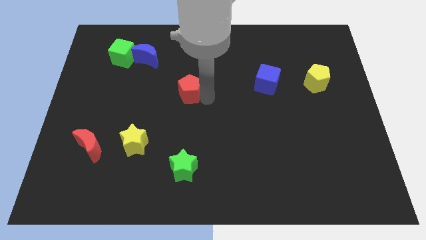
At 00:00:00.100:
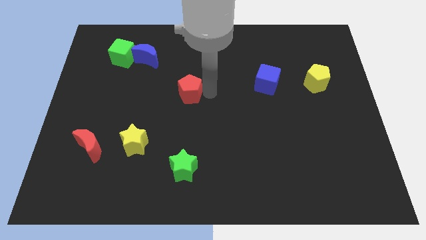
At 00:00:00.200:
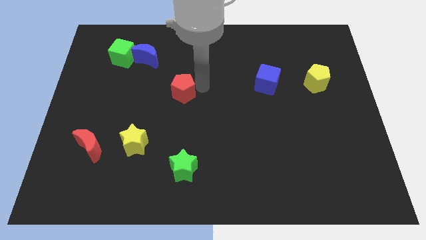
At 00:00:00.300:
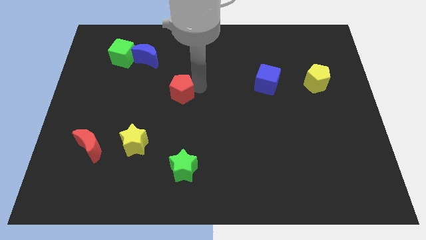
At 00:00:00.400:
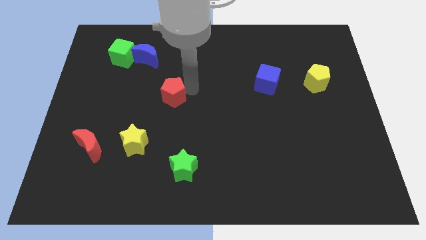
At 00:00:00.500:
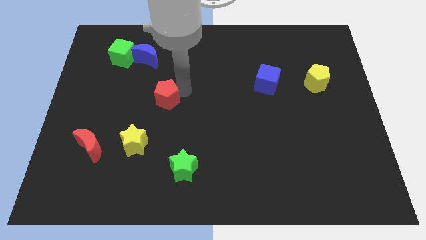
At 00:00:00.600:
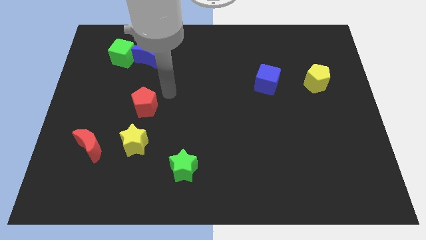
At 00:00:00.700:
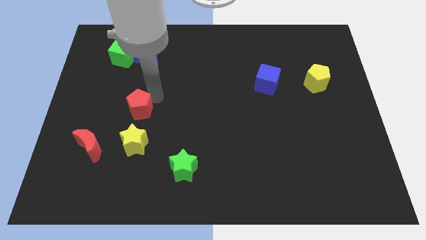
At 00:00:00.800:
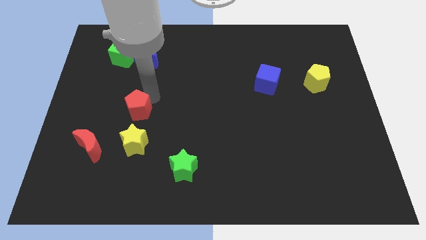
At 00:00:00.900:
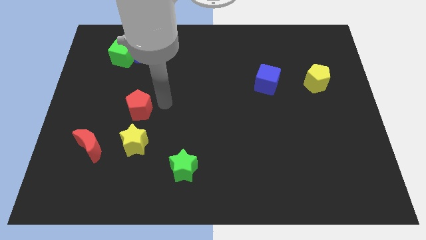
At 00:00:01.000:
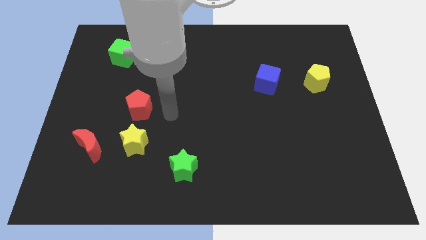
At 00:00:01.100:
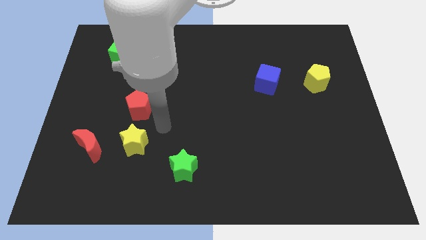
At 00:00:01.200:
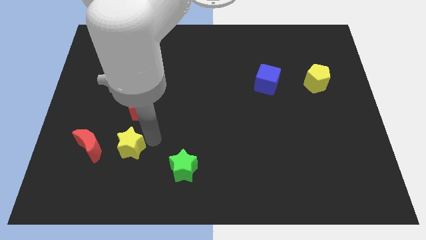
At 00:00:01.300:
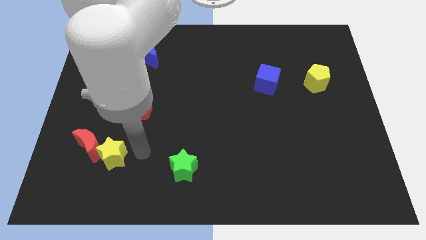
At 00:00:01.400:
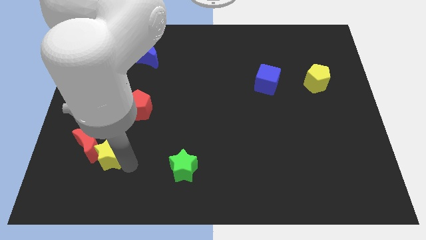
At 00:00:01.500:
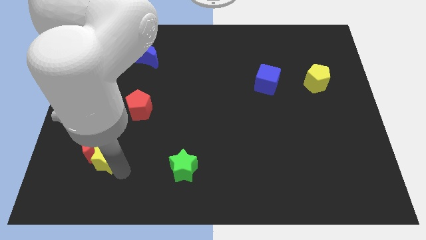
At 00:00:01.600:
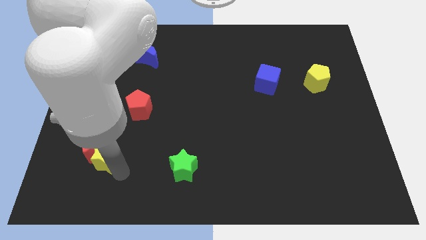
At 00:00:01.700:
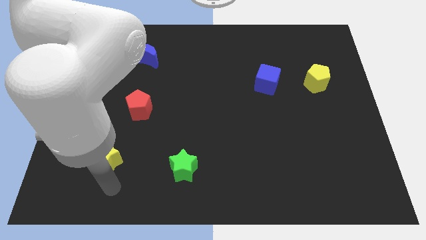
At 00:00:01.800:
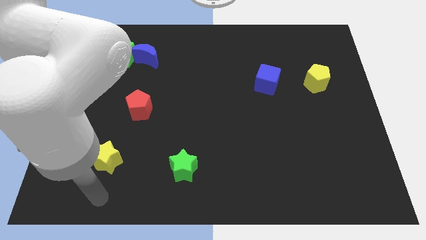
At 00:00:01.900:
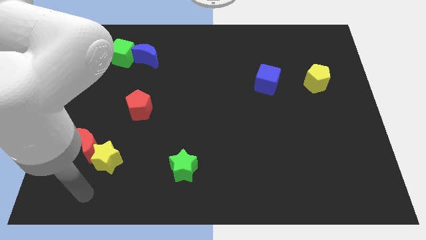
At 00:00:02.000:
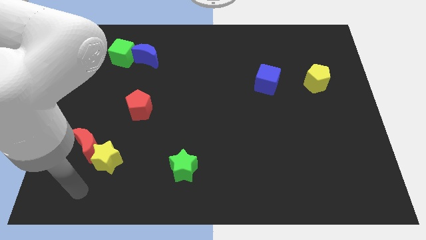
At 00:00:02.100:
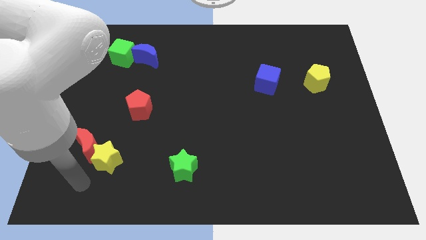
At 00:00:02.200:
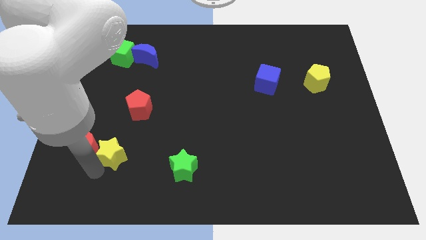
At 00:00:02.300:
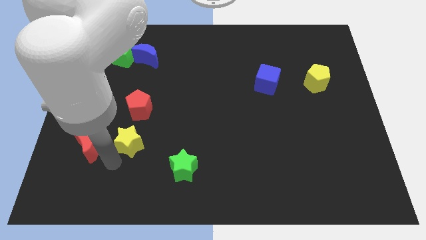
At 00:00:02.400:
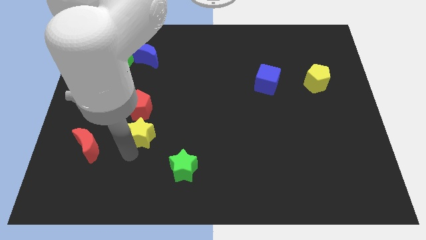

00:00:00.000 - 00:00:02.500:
separate the yellow star from the red moon

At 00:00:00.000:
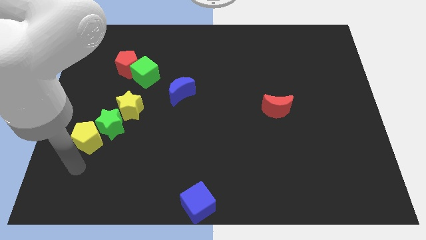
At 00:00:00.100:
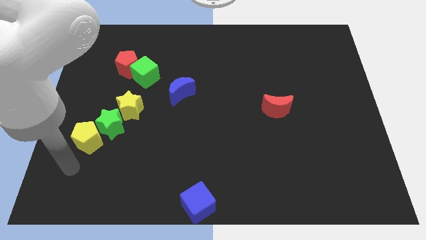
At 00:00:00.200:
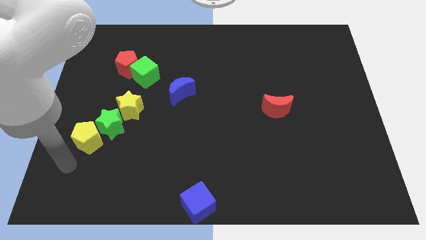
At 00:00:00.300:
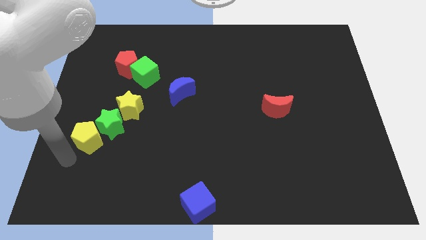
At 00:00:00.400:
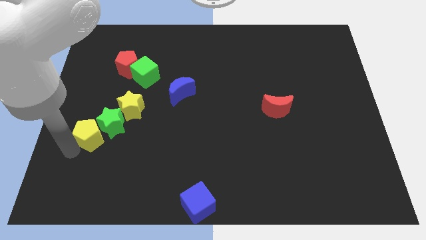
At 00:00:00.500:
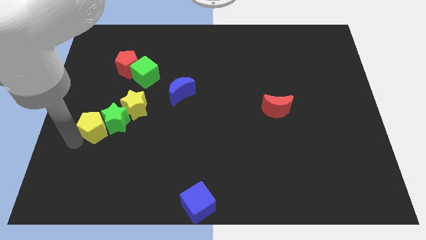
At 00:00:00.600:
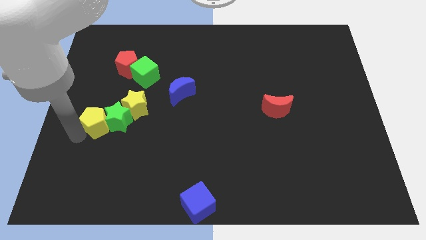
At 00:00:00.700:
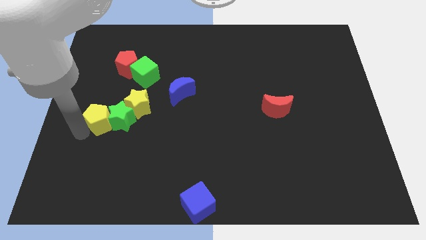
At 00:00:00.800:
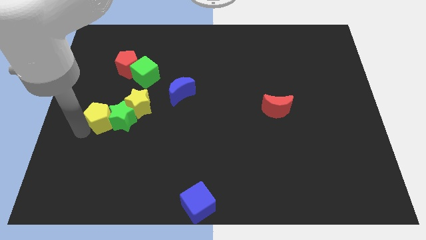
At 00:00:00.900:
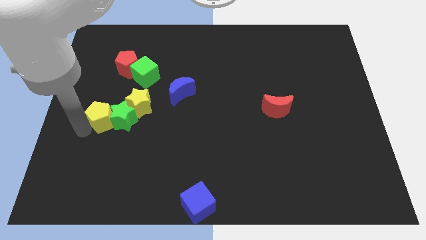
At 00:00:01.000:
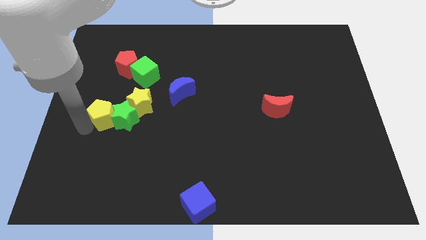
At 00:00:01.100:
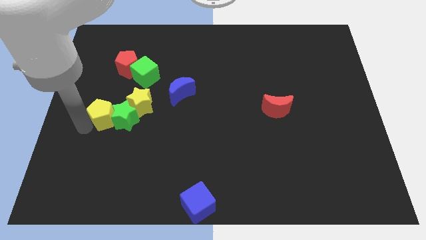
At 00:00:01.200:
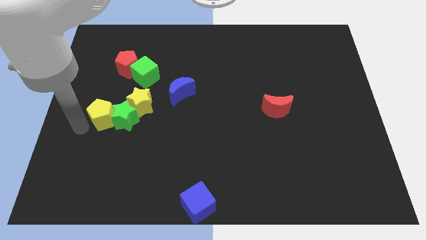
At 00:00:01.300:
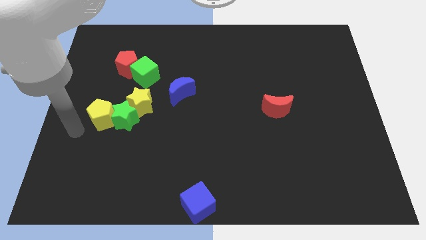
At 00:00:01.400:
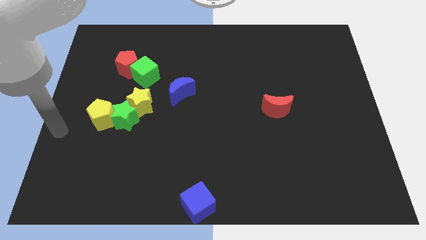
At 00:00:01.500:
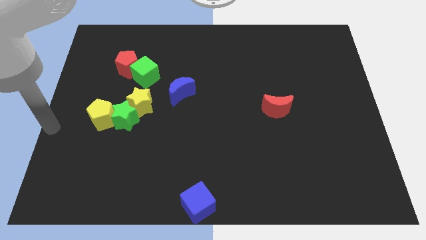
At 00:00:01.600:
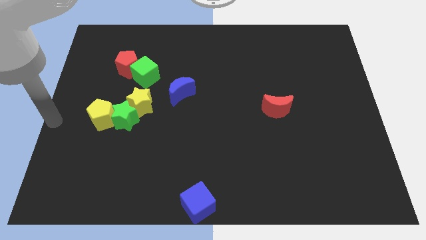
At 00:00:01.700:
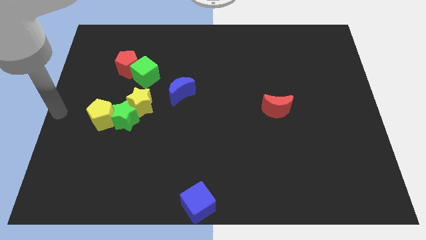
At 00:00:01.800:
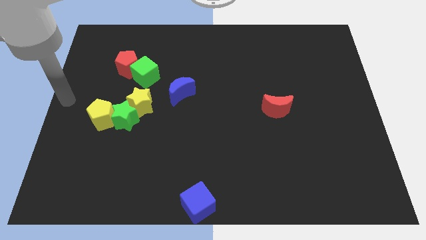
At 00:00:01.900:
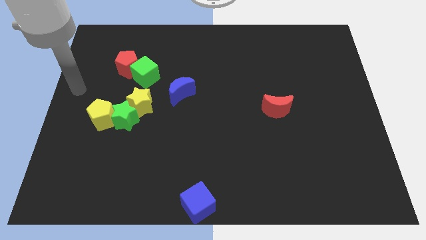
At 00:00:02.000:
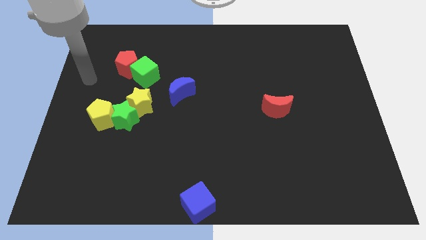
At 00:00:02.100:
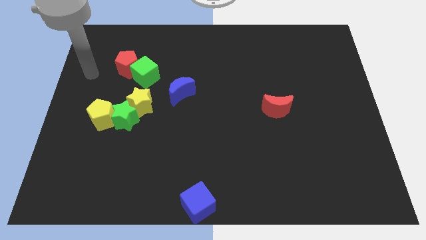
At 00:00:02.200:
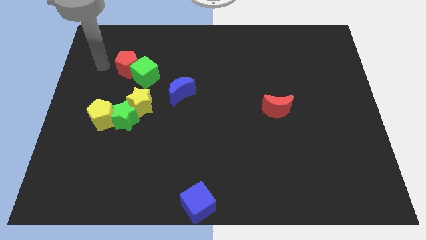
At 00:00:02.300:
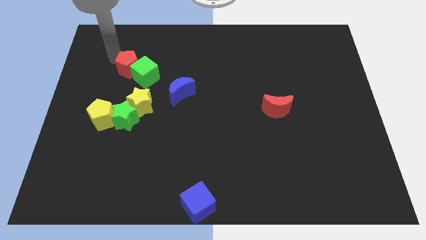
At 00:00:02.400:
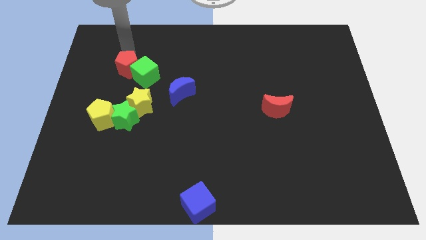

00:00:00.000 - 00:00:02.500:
push the yellow blocks and green star towards the green cube

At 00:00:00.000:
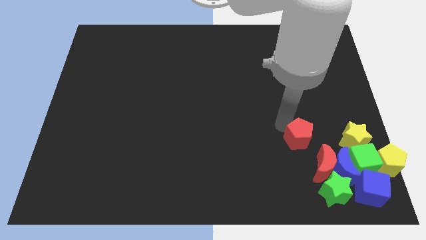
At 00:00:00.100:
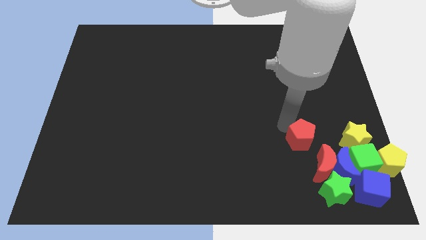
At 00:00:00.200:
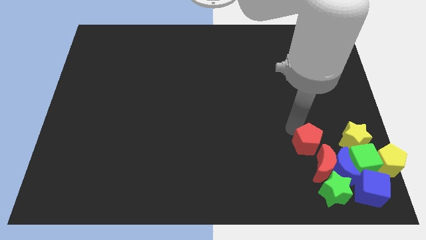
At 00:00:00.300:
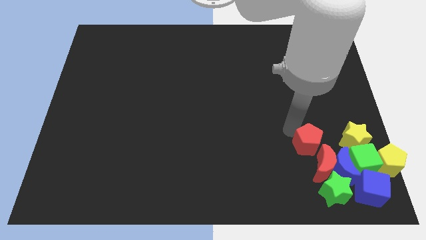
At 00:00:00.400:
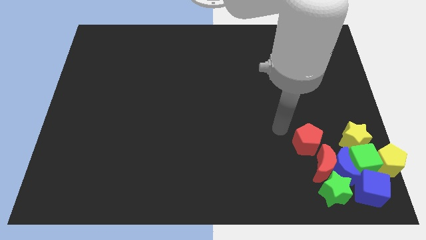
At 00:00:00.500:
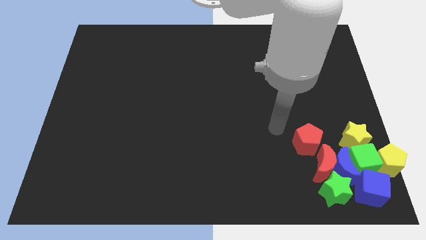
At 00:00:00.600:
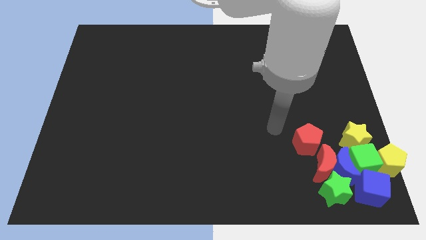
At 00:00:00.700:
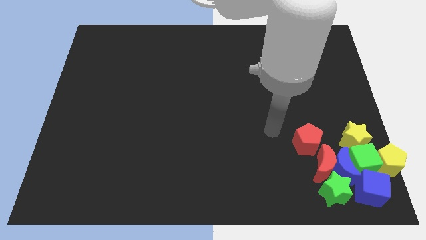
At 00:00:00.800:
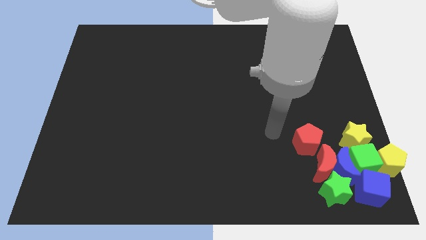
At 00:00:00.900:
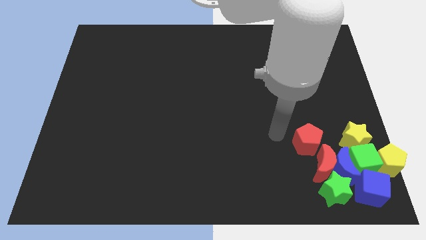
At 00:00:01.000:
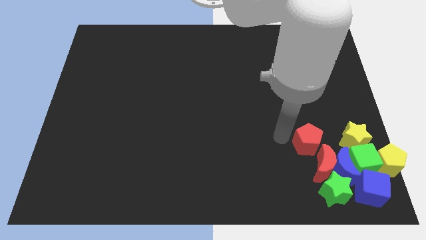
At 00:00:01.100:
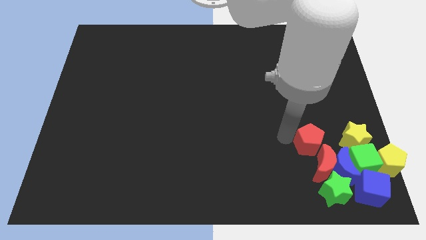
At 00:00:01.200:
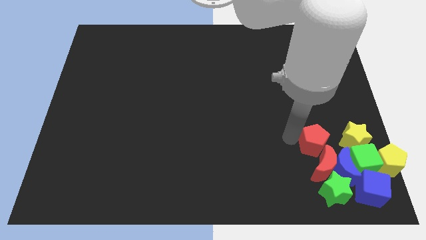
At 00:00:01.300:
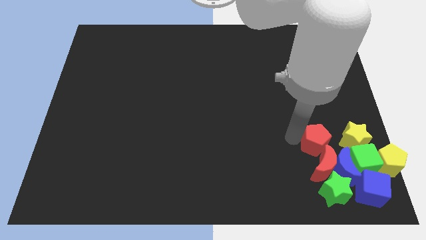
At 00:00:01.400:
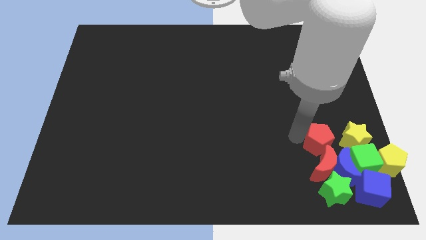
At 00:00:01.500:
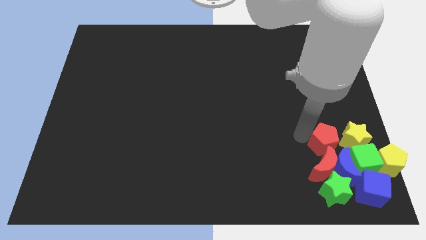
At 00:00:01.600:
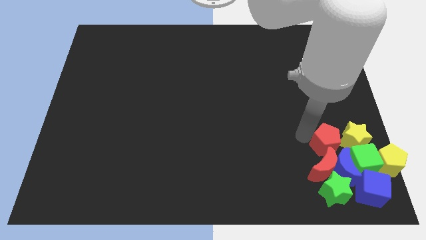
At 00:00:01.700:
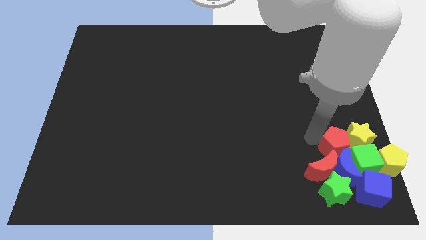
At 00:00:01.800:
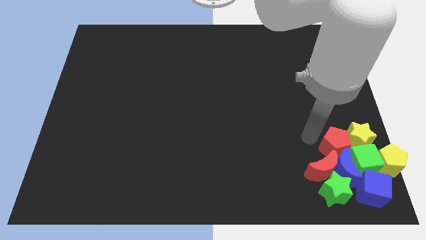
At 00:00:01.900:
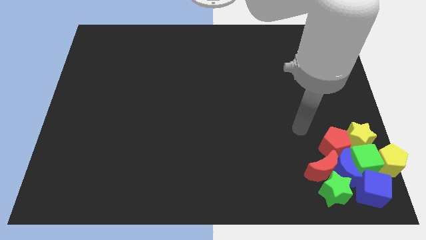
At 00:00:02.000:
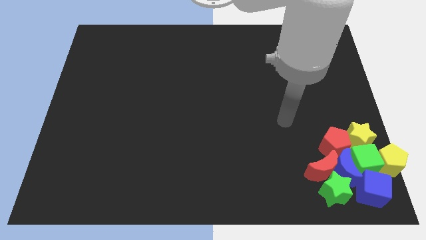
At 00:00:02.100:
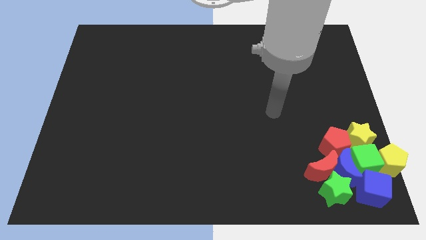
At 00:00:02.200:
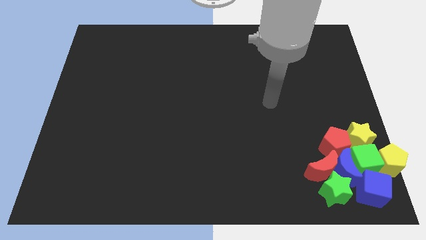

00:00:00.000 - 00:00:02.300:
push the red pentagon to the top of blue crescent

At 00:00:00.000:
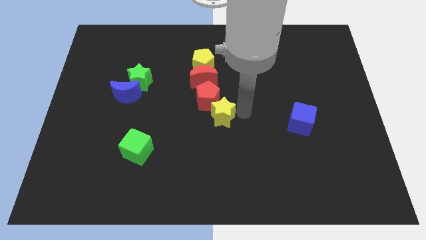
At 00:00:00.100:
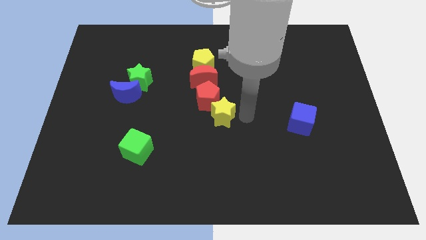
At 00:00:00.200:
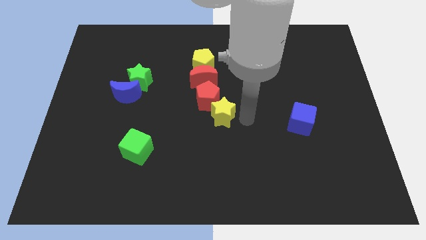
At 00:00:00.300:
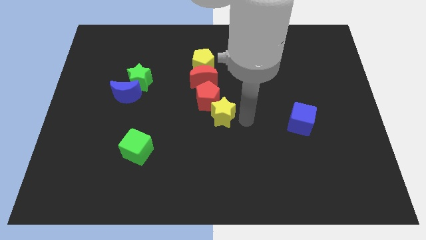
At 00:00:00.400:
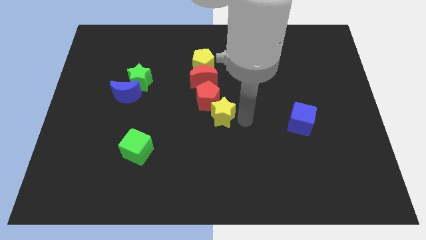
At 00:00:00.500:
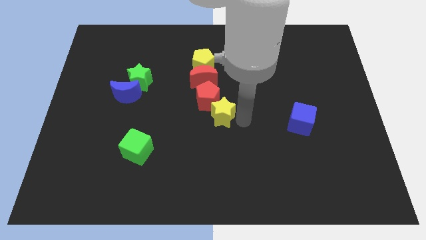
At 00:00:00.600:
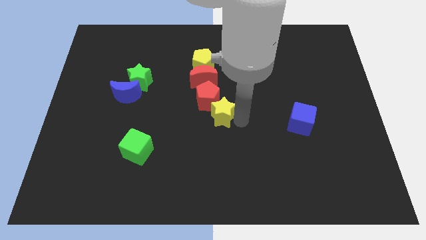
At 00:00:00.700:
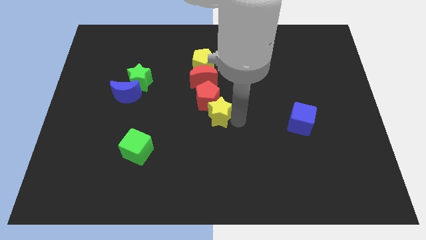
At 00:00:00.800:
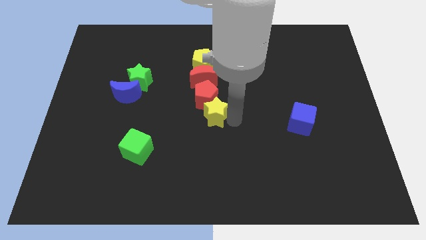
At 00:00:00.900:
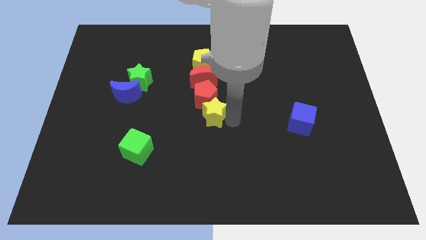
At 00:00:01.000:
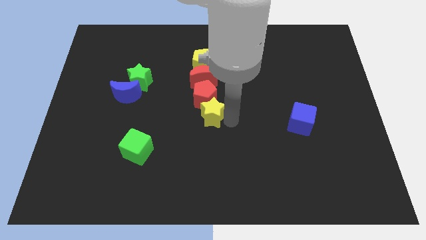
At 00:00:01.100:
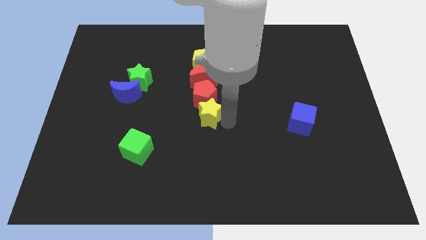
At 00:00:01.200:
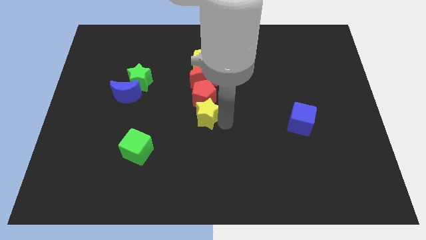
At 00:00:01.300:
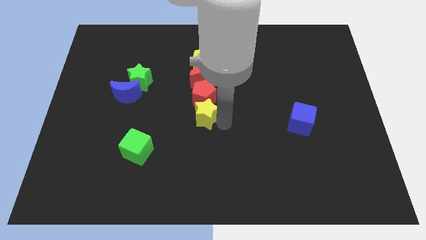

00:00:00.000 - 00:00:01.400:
place the yellow star below the red pentagon

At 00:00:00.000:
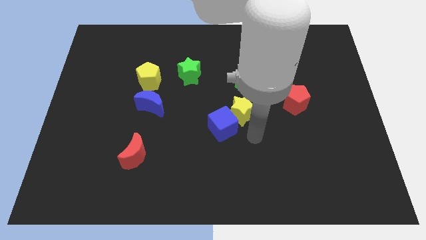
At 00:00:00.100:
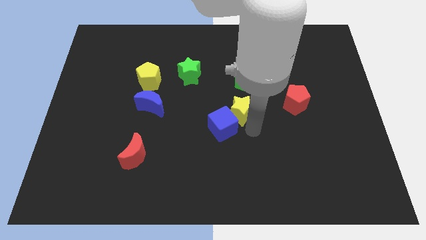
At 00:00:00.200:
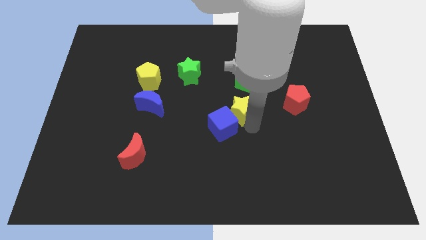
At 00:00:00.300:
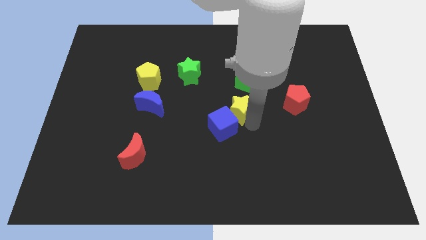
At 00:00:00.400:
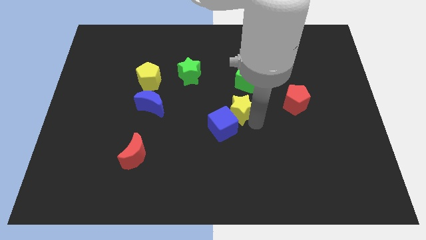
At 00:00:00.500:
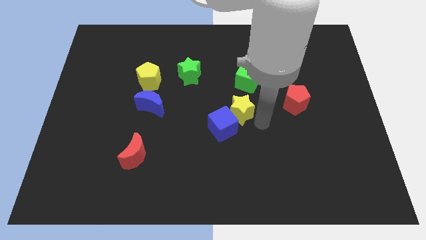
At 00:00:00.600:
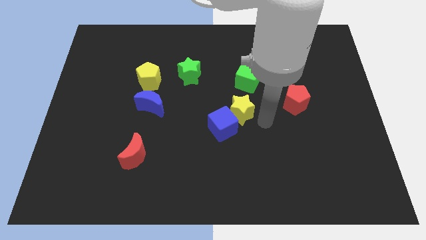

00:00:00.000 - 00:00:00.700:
tap the bottom side of the yellow star
